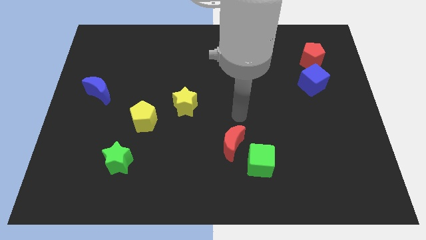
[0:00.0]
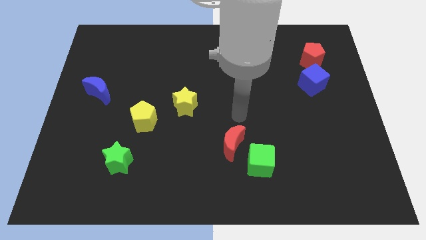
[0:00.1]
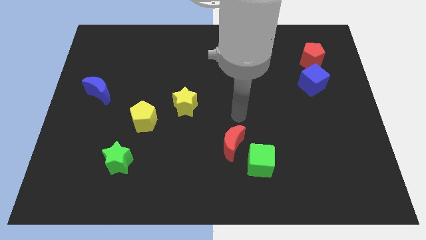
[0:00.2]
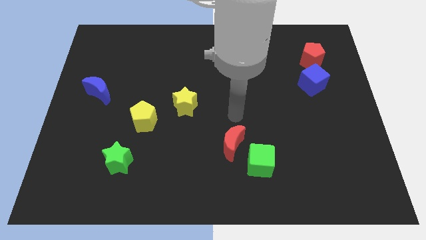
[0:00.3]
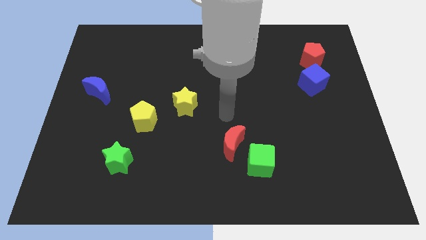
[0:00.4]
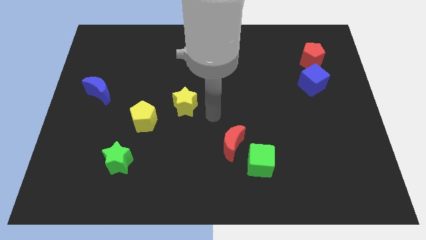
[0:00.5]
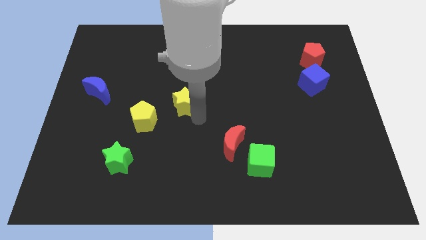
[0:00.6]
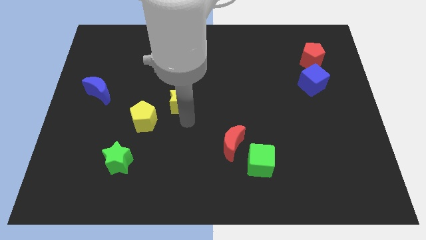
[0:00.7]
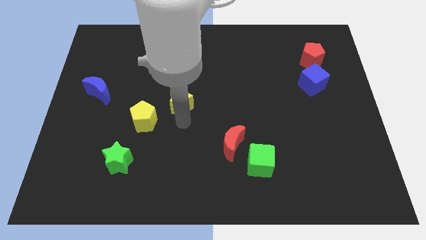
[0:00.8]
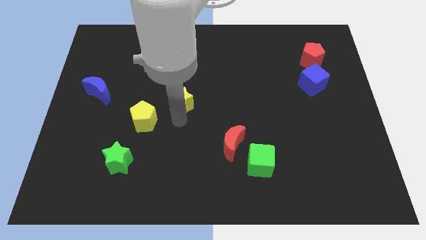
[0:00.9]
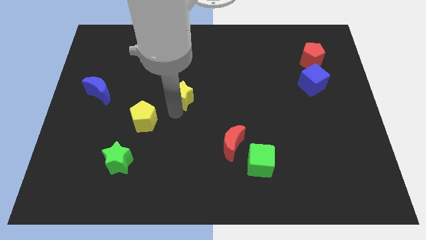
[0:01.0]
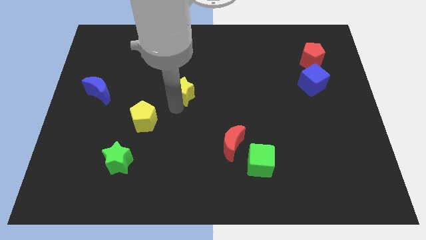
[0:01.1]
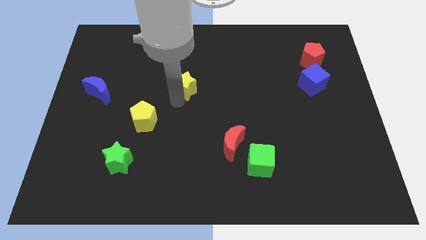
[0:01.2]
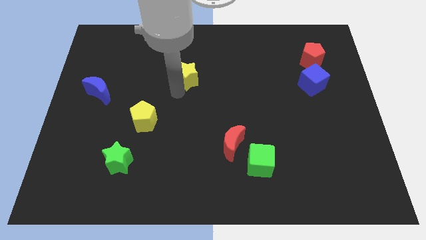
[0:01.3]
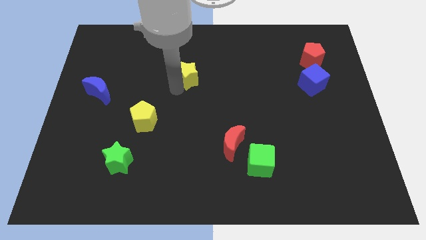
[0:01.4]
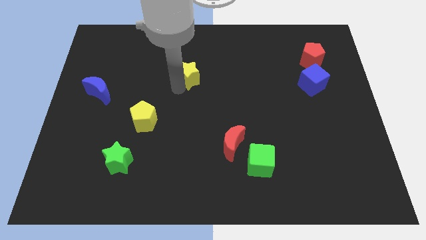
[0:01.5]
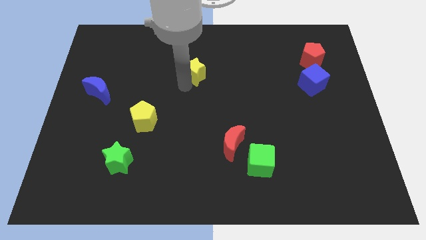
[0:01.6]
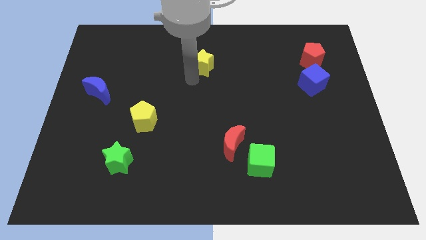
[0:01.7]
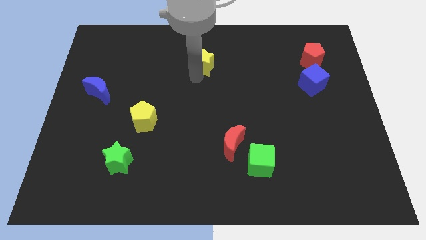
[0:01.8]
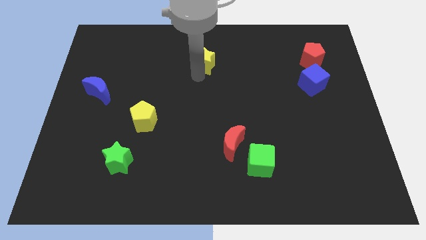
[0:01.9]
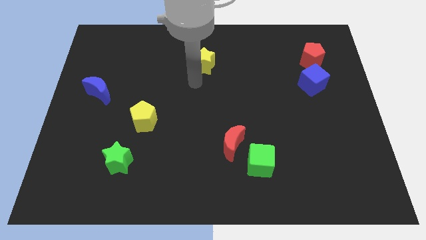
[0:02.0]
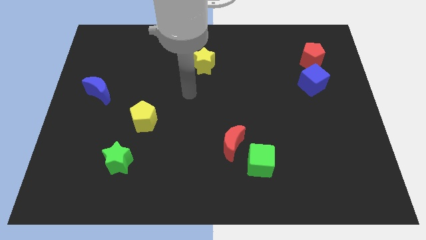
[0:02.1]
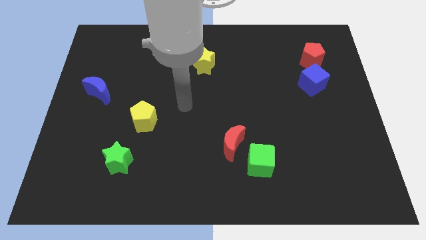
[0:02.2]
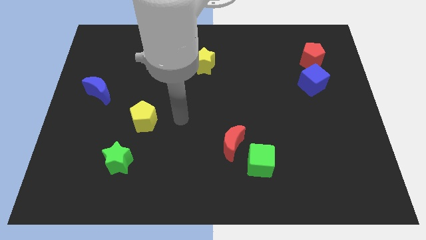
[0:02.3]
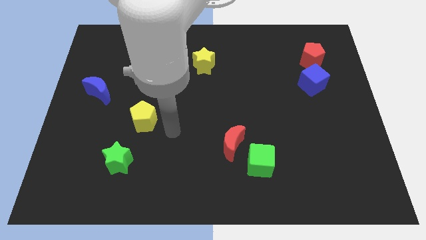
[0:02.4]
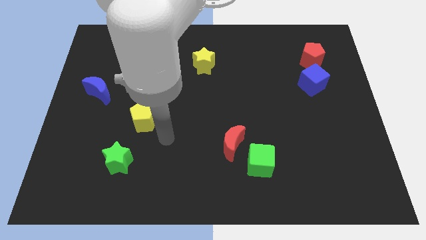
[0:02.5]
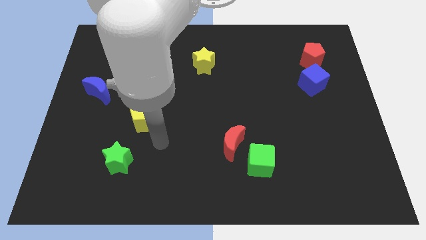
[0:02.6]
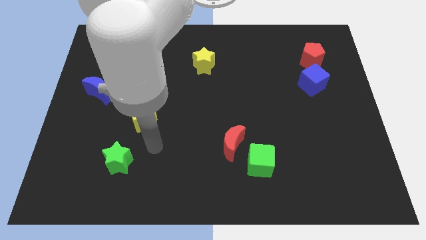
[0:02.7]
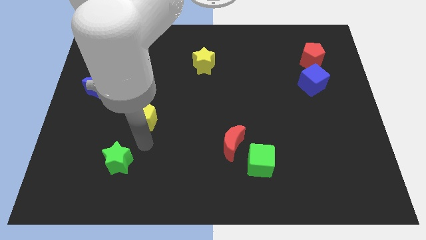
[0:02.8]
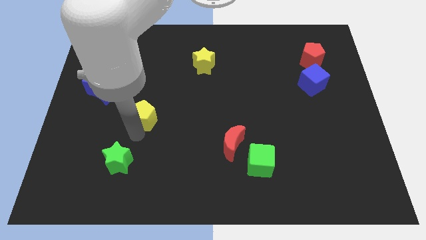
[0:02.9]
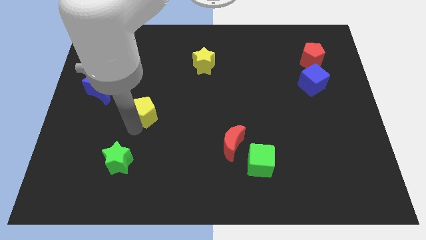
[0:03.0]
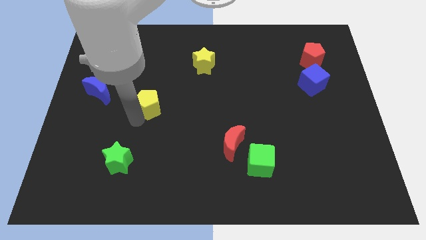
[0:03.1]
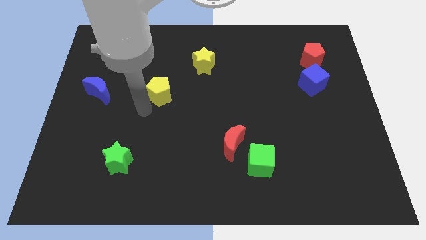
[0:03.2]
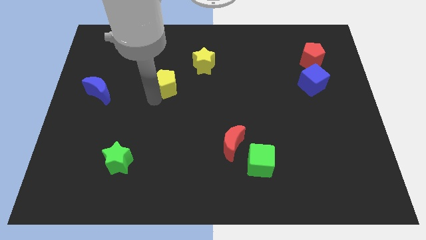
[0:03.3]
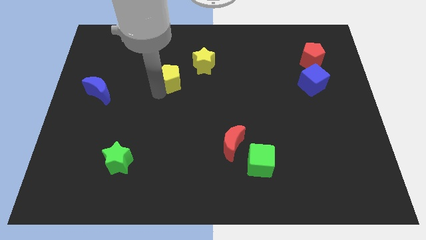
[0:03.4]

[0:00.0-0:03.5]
push the yellow star and pentagon towards top

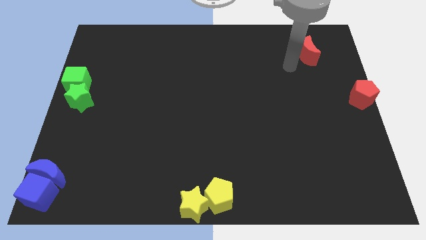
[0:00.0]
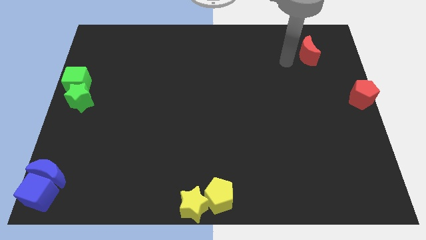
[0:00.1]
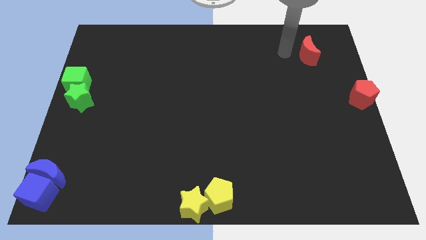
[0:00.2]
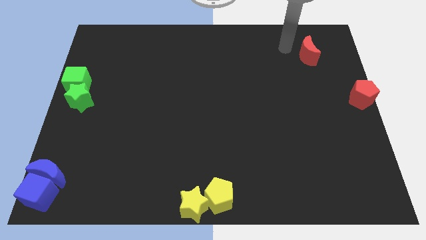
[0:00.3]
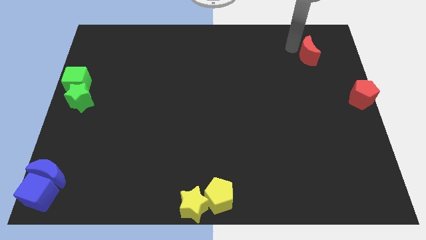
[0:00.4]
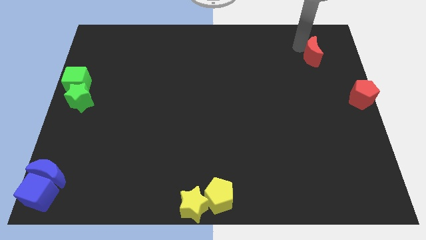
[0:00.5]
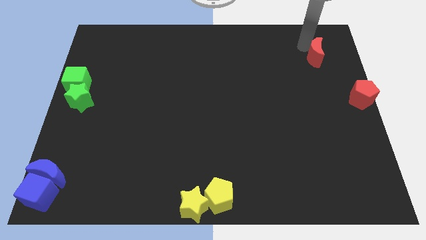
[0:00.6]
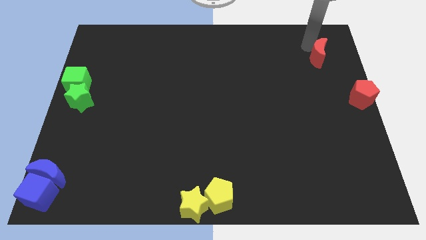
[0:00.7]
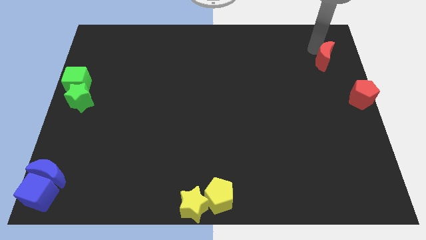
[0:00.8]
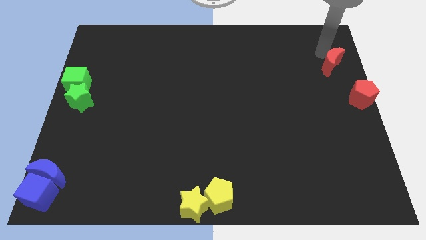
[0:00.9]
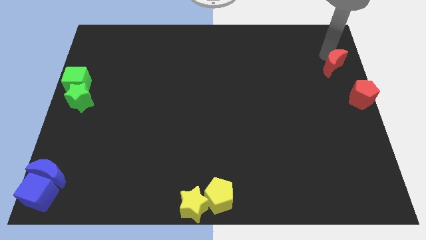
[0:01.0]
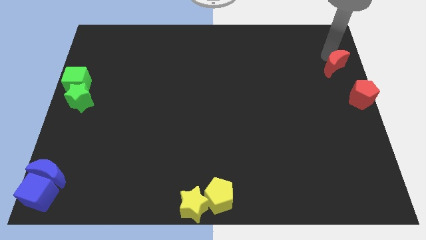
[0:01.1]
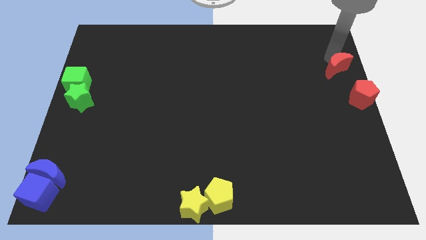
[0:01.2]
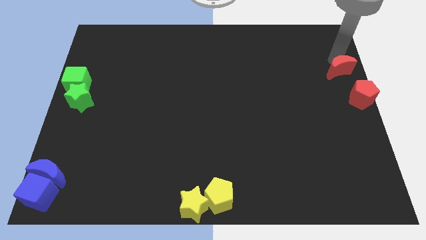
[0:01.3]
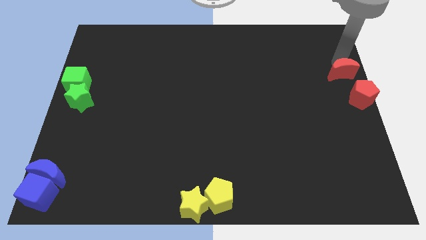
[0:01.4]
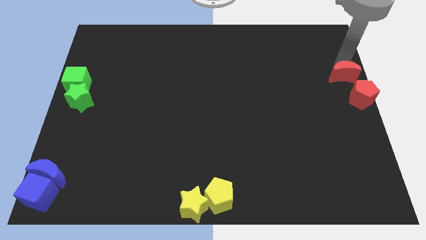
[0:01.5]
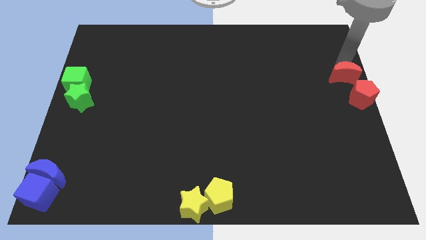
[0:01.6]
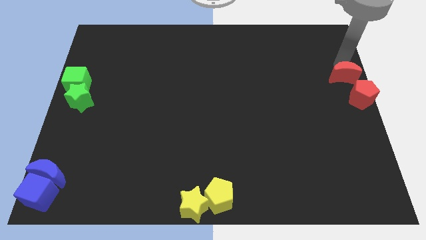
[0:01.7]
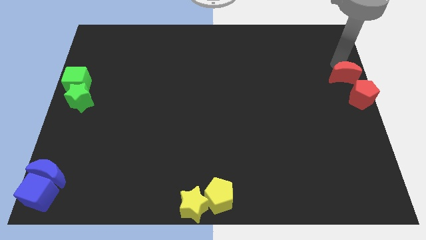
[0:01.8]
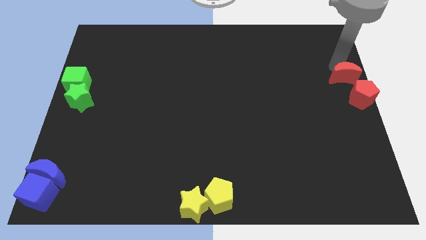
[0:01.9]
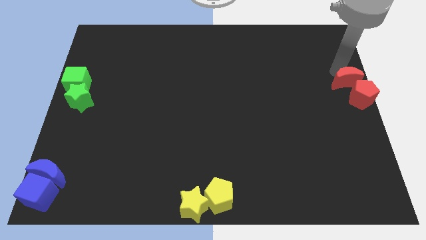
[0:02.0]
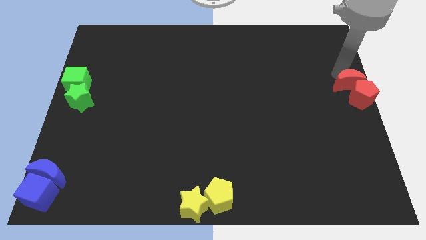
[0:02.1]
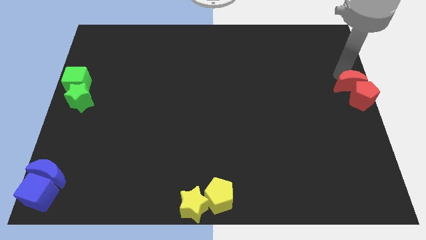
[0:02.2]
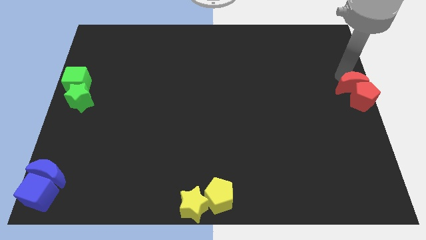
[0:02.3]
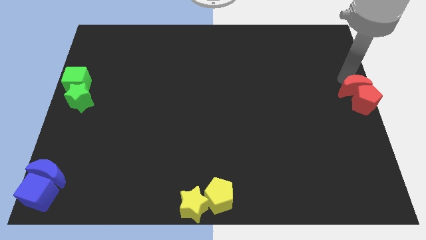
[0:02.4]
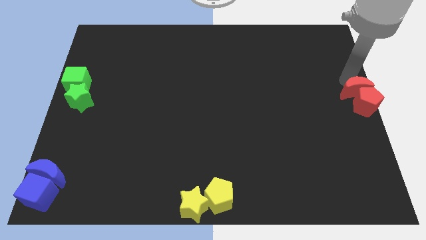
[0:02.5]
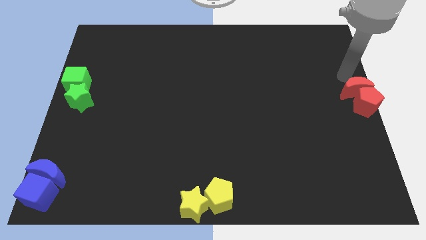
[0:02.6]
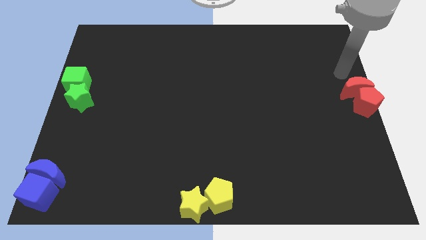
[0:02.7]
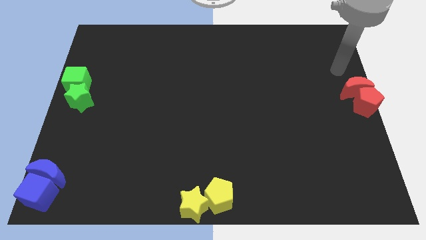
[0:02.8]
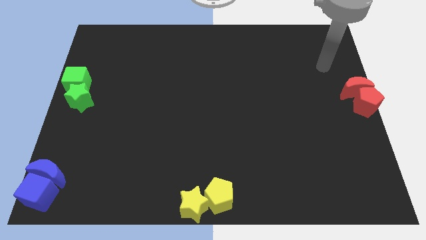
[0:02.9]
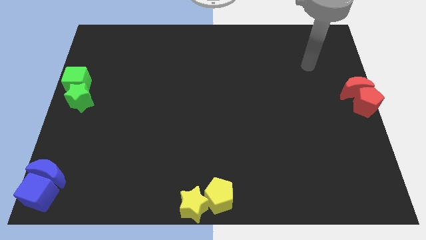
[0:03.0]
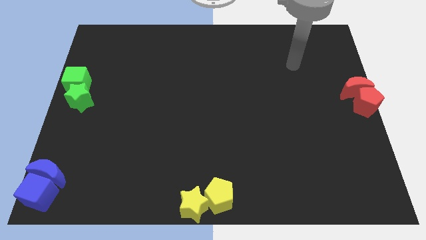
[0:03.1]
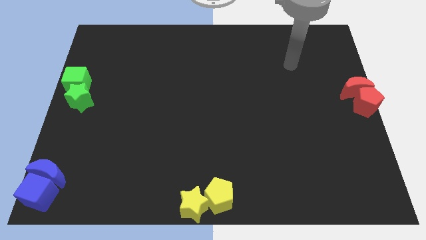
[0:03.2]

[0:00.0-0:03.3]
slide the red crescent at the center right

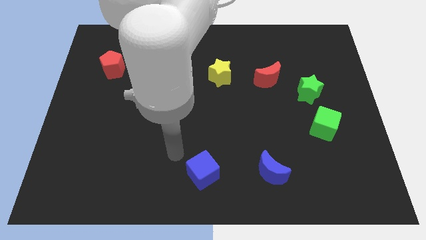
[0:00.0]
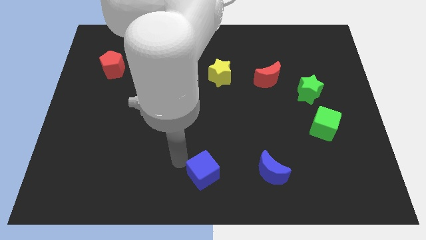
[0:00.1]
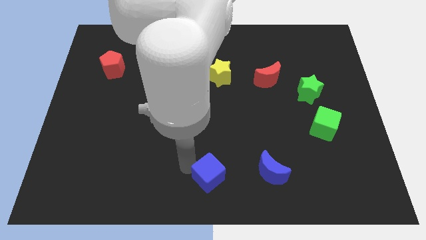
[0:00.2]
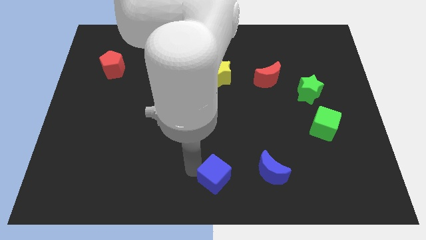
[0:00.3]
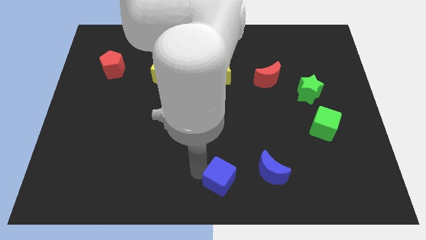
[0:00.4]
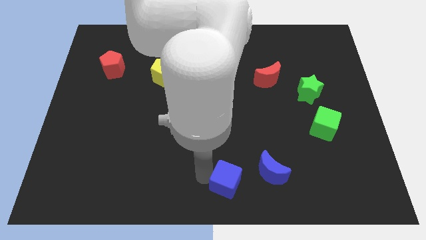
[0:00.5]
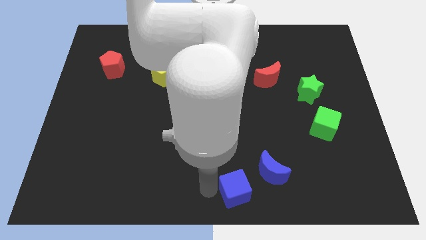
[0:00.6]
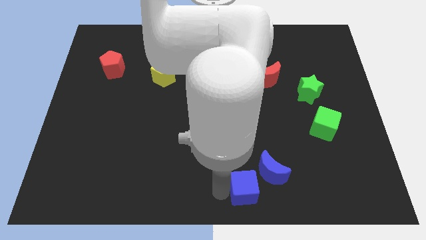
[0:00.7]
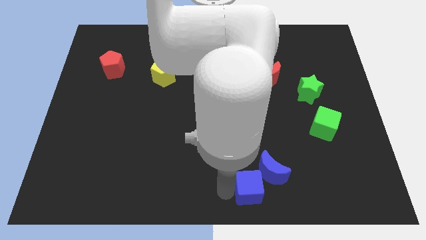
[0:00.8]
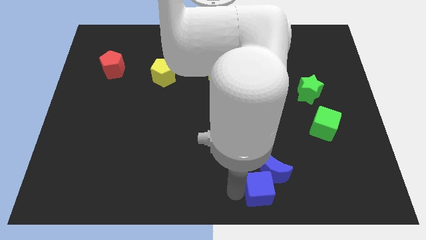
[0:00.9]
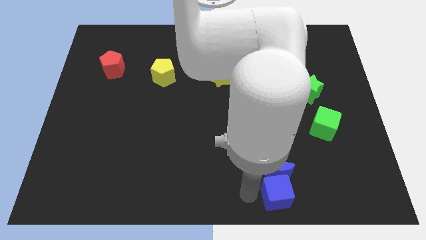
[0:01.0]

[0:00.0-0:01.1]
make the blue cube to touch the blue crescent

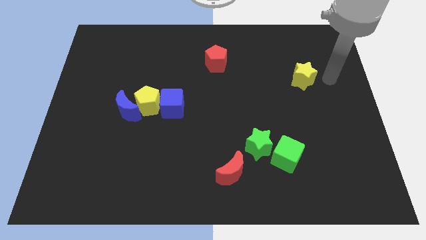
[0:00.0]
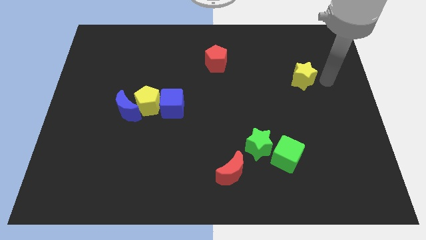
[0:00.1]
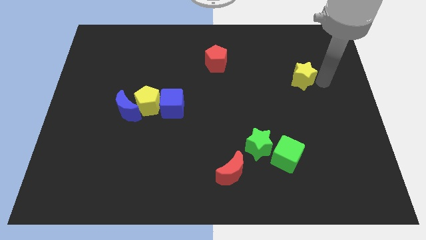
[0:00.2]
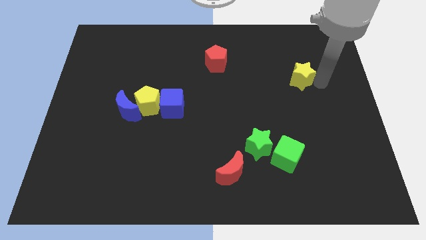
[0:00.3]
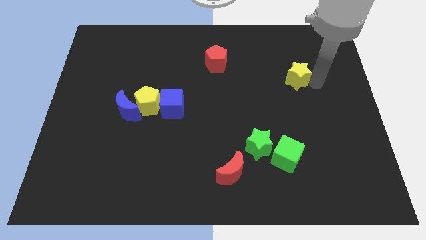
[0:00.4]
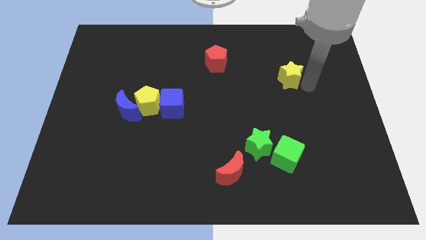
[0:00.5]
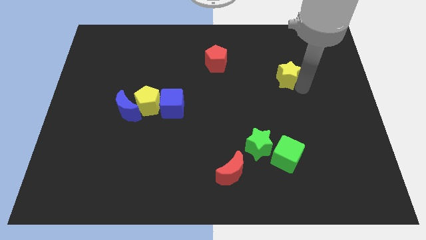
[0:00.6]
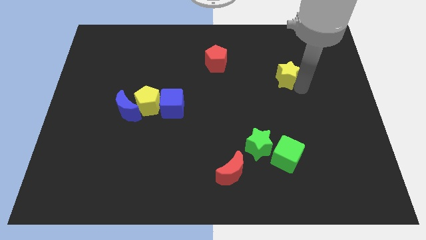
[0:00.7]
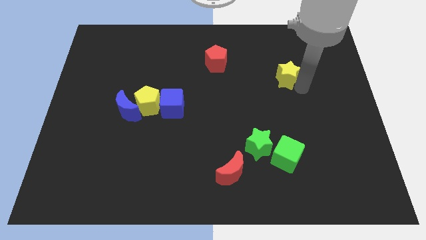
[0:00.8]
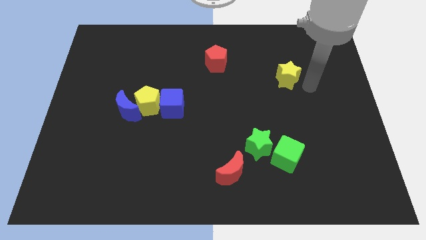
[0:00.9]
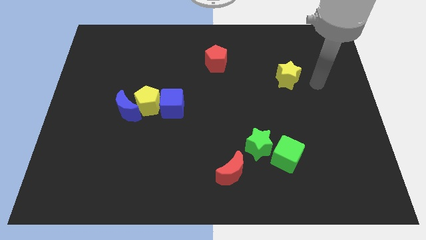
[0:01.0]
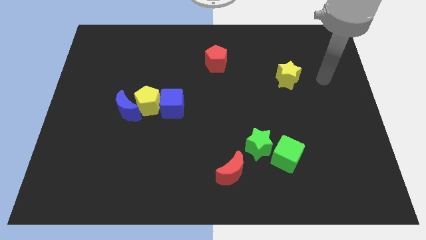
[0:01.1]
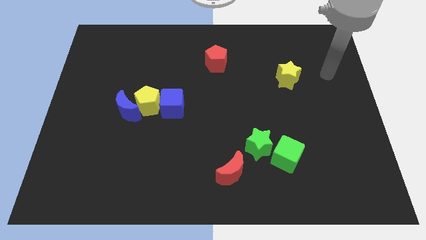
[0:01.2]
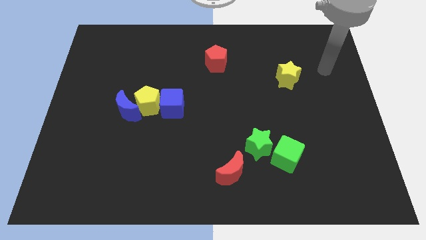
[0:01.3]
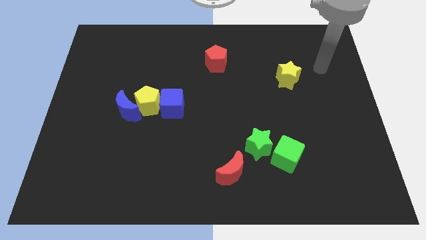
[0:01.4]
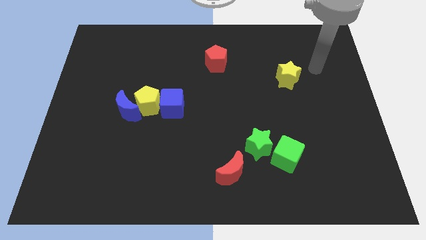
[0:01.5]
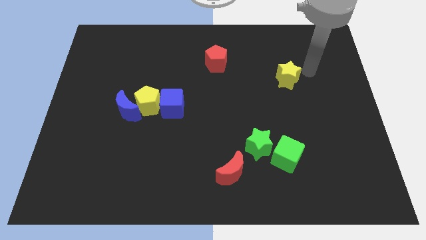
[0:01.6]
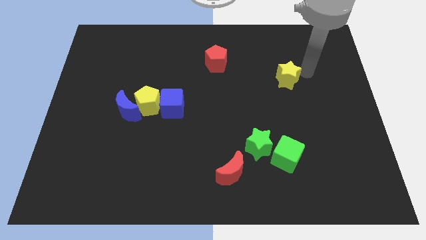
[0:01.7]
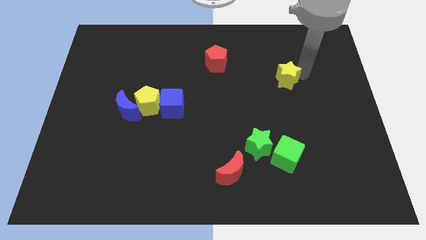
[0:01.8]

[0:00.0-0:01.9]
move the yellow star slightly left
